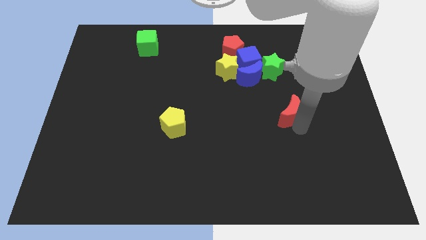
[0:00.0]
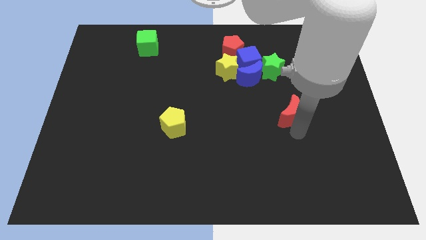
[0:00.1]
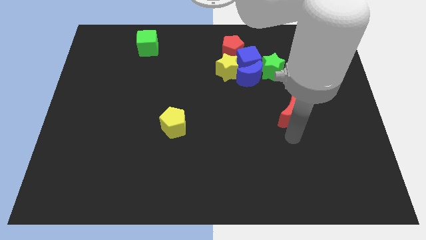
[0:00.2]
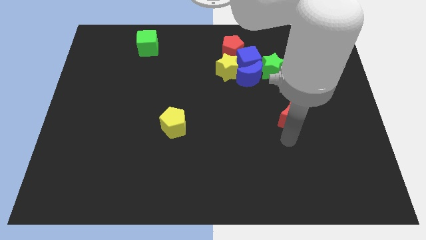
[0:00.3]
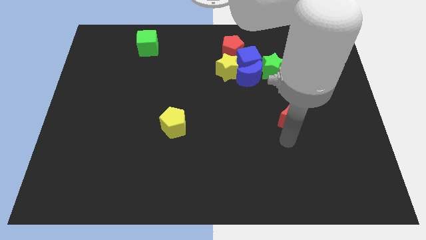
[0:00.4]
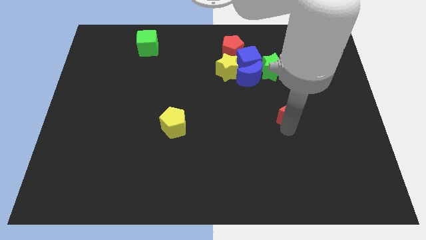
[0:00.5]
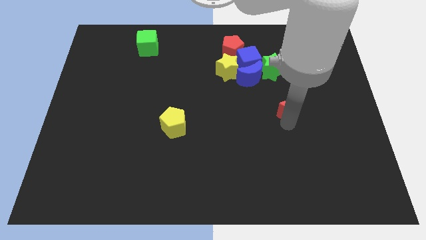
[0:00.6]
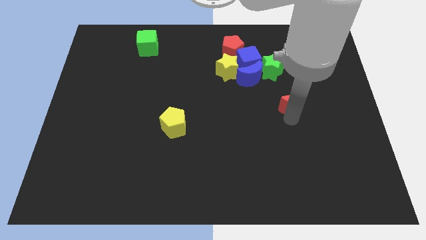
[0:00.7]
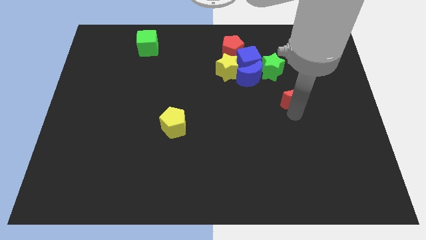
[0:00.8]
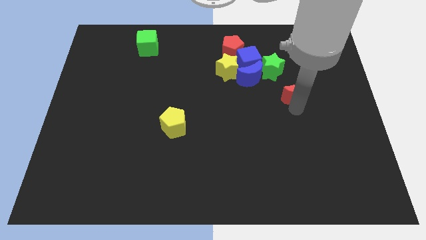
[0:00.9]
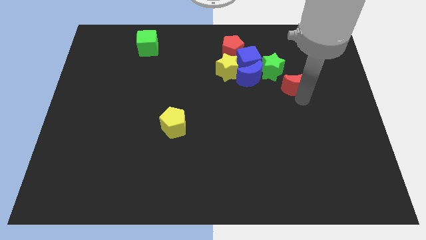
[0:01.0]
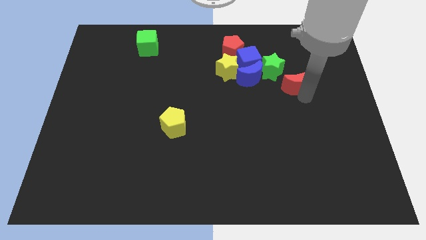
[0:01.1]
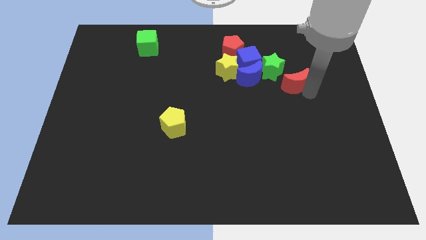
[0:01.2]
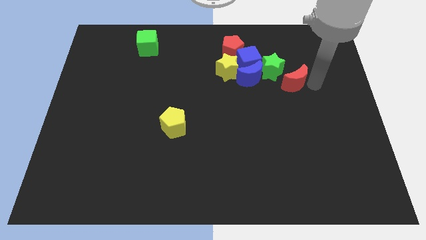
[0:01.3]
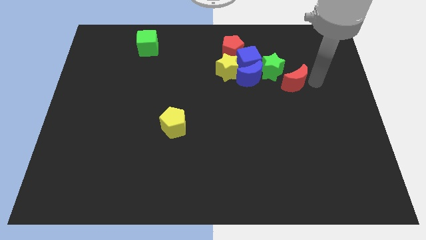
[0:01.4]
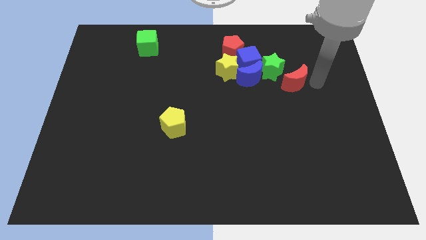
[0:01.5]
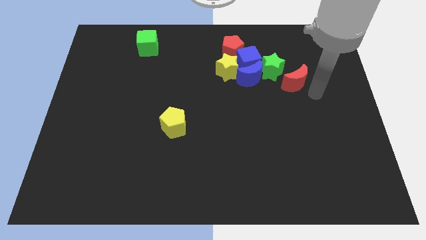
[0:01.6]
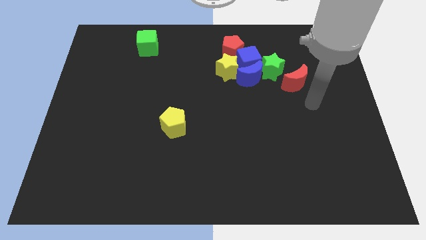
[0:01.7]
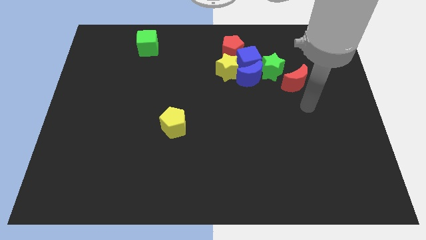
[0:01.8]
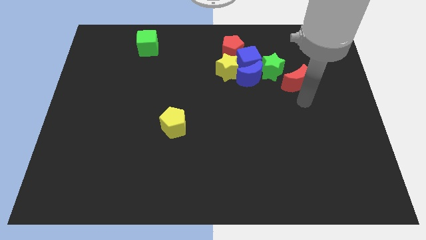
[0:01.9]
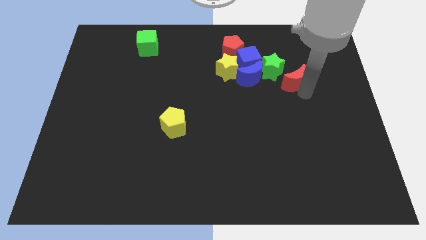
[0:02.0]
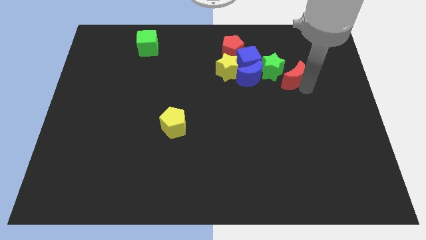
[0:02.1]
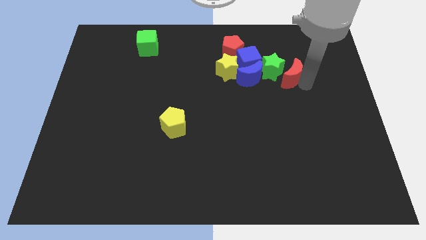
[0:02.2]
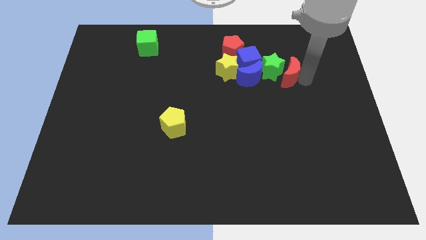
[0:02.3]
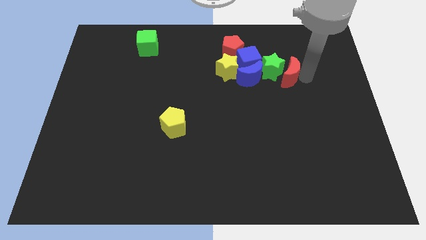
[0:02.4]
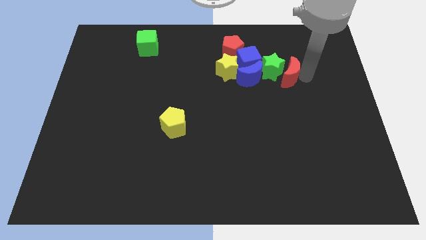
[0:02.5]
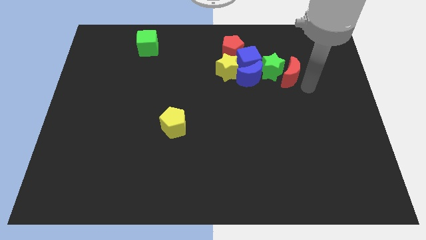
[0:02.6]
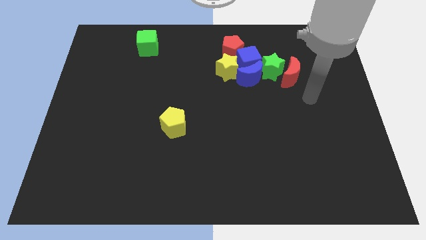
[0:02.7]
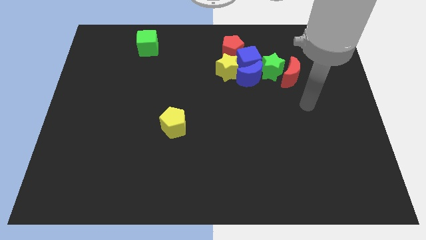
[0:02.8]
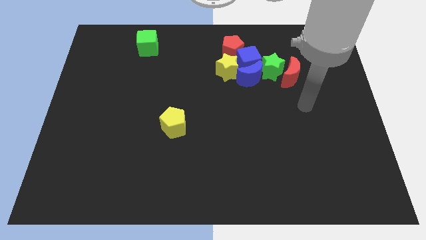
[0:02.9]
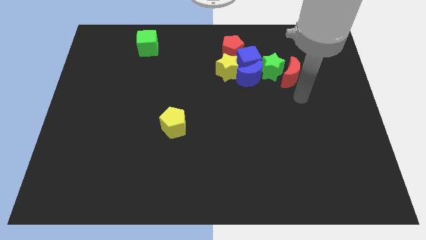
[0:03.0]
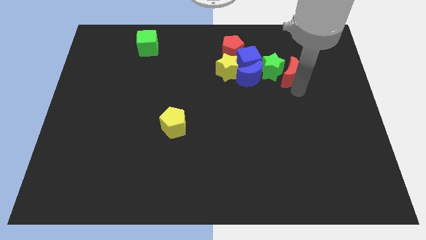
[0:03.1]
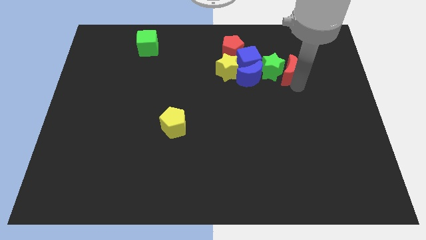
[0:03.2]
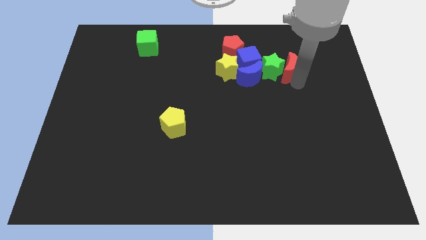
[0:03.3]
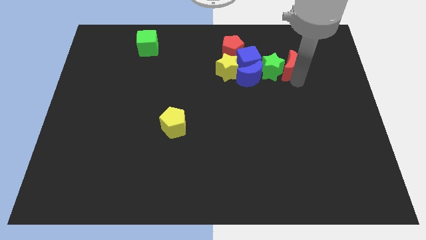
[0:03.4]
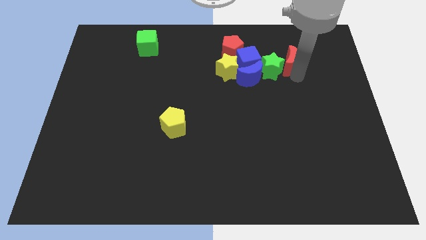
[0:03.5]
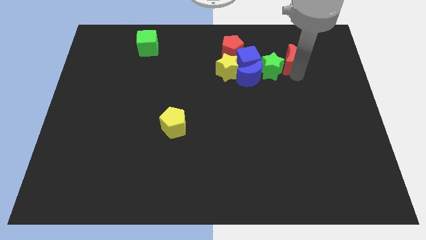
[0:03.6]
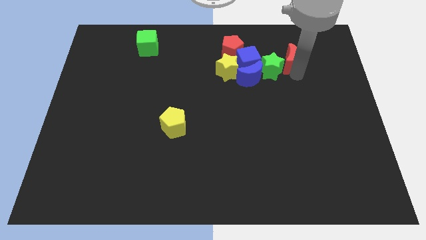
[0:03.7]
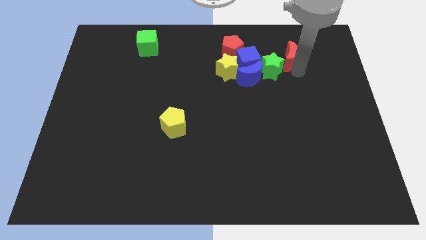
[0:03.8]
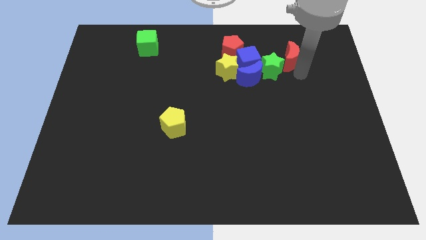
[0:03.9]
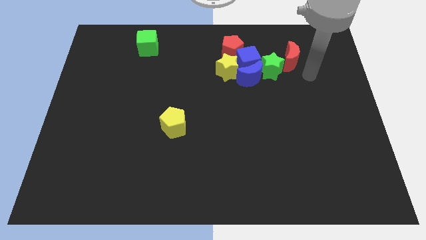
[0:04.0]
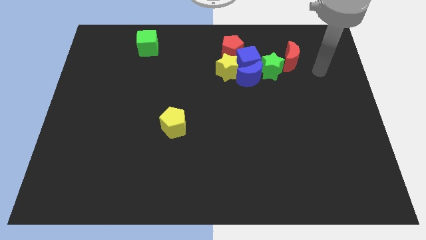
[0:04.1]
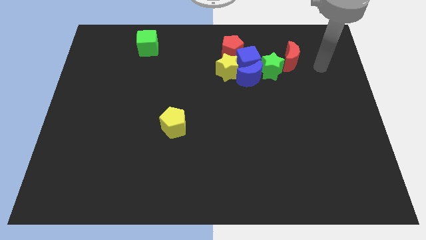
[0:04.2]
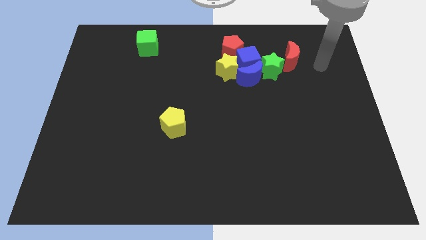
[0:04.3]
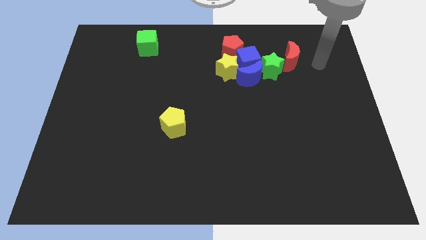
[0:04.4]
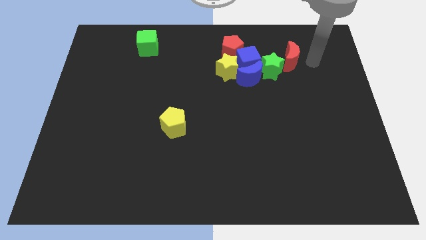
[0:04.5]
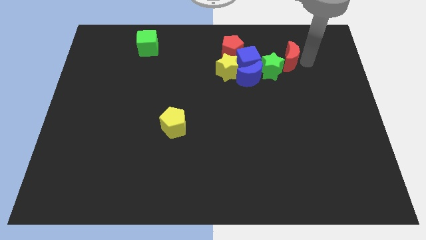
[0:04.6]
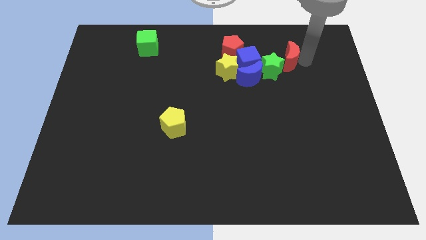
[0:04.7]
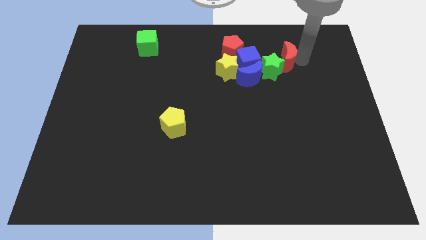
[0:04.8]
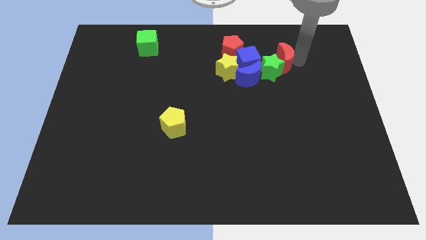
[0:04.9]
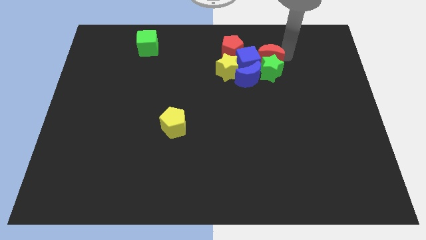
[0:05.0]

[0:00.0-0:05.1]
place red moon on top of green star

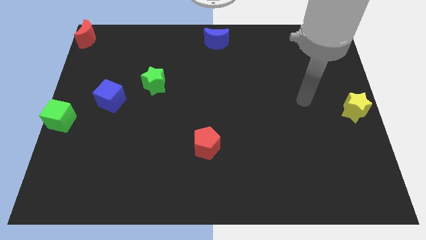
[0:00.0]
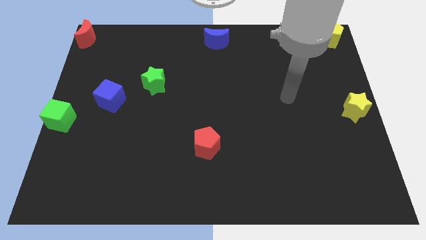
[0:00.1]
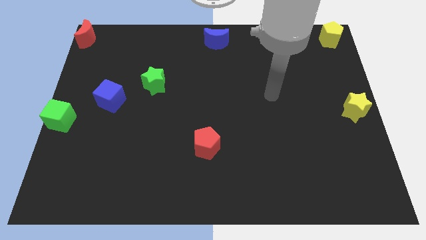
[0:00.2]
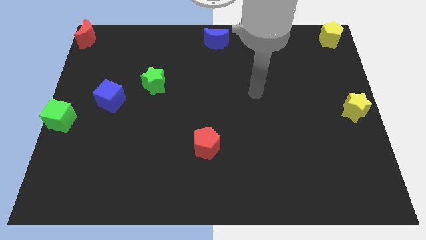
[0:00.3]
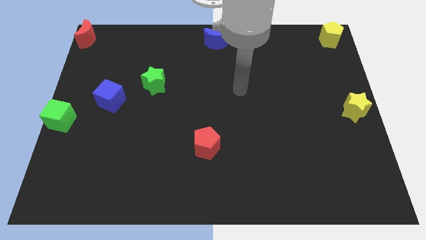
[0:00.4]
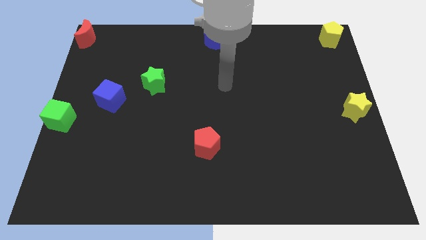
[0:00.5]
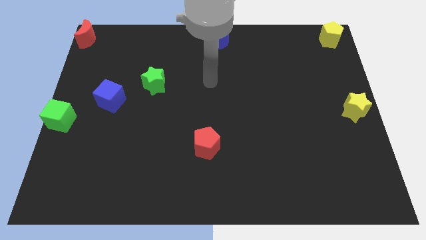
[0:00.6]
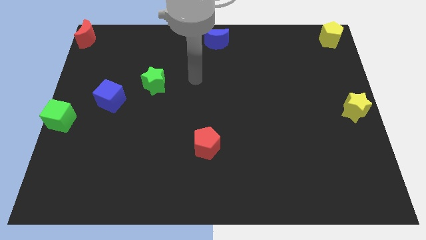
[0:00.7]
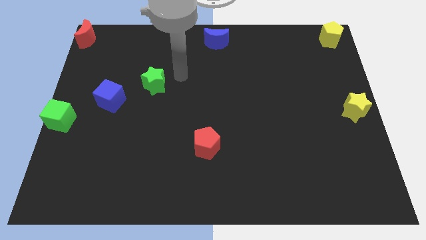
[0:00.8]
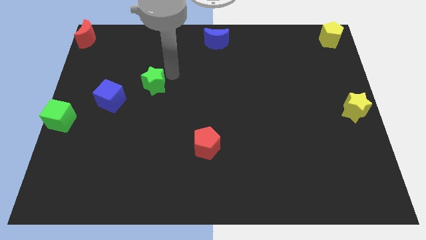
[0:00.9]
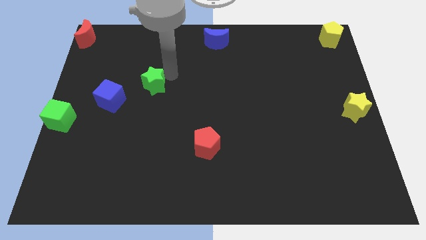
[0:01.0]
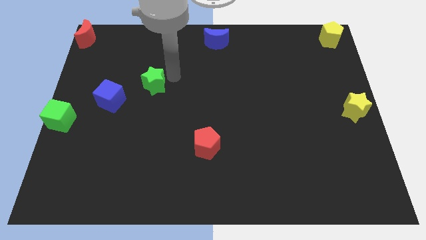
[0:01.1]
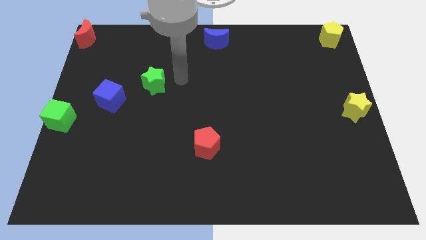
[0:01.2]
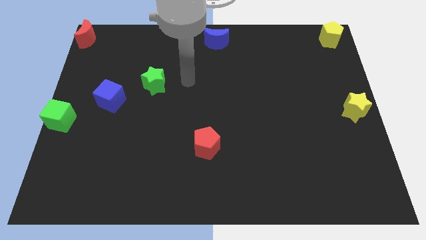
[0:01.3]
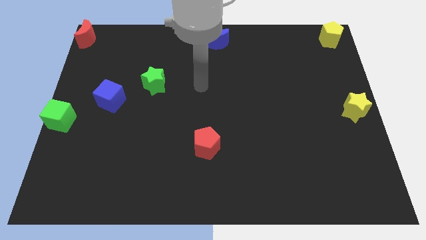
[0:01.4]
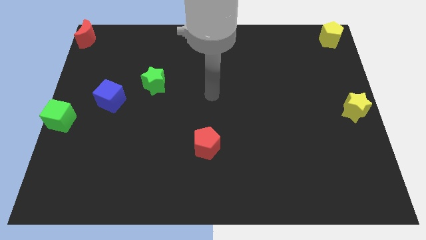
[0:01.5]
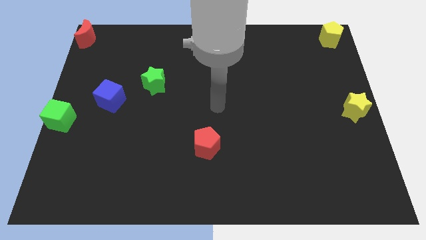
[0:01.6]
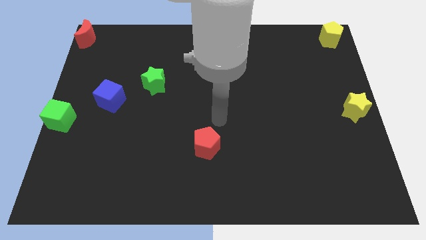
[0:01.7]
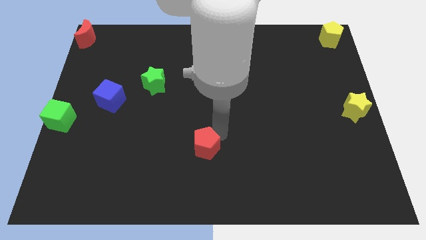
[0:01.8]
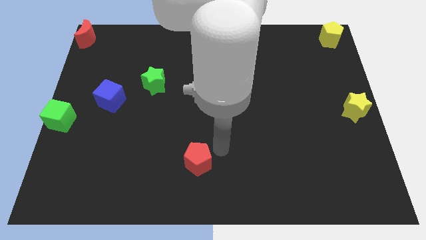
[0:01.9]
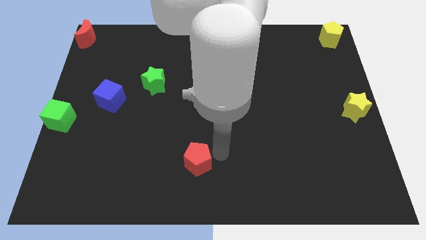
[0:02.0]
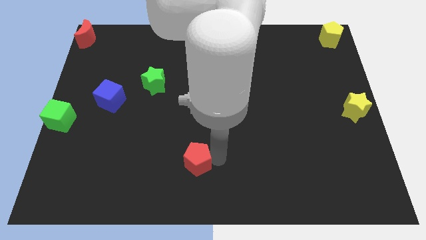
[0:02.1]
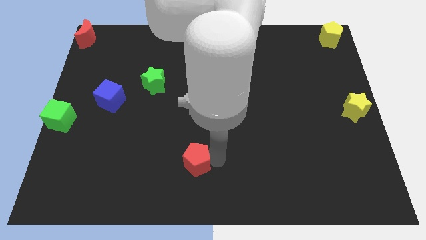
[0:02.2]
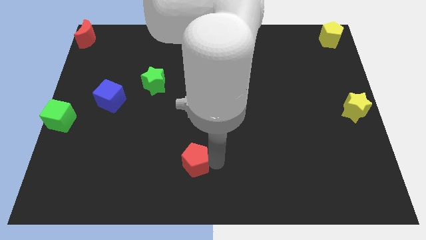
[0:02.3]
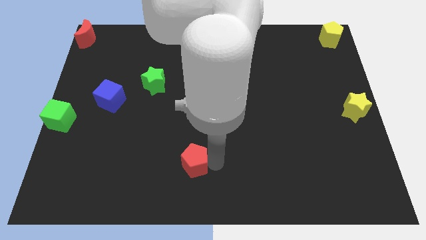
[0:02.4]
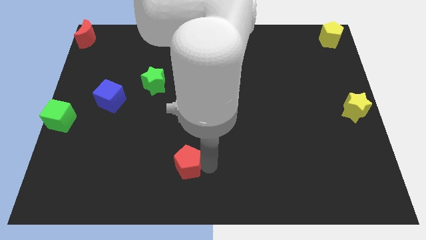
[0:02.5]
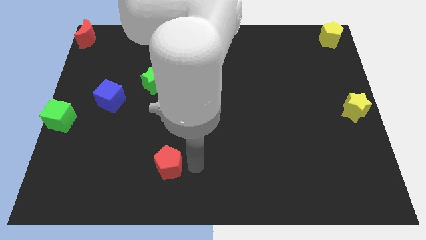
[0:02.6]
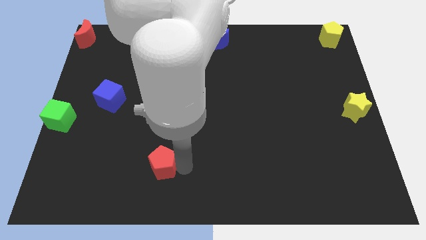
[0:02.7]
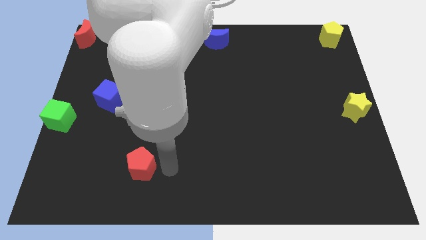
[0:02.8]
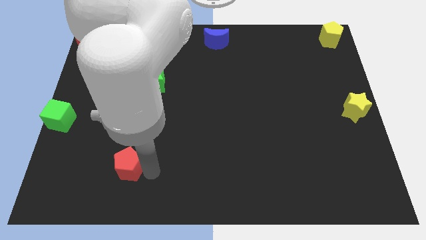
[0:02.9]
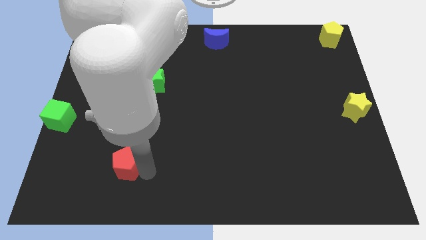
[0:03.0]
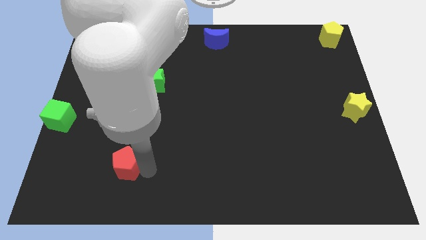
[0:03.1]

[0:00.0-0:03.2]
push the red pentagon towards the bottom left side of the board

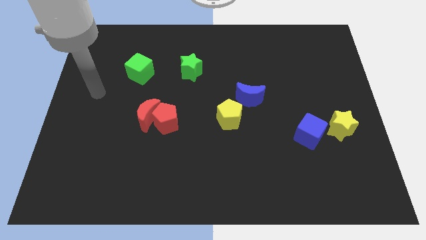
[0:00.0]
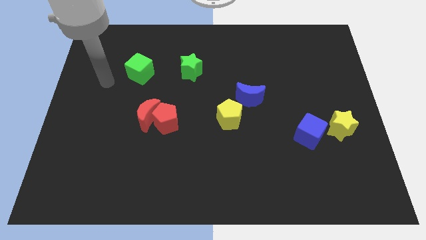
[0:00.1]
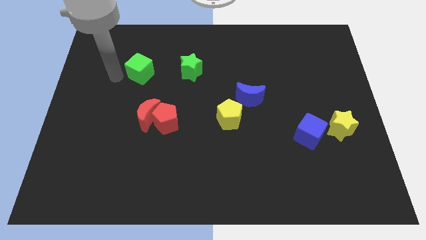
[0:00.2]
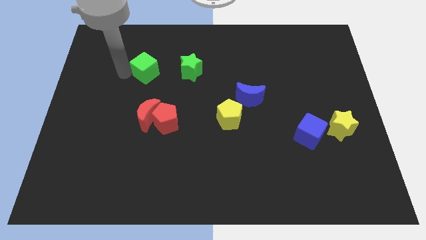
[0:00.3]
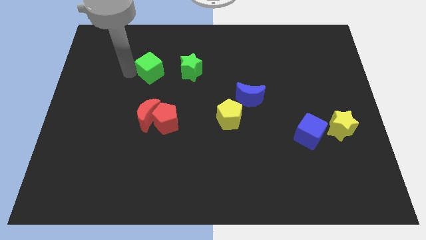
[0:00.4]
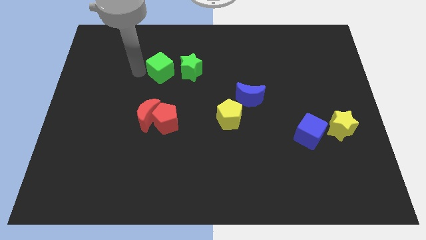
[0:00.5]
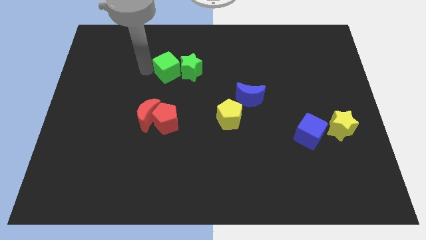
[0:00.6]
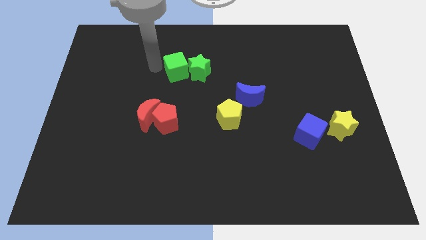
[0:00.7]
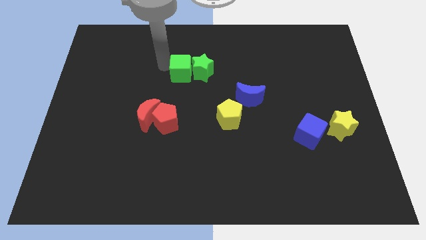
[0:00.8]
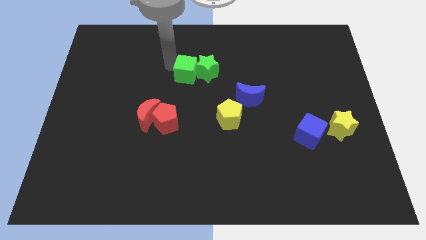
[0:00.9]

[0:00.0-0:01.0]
push the green cube into the green star
